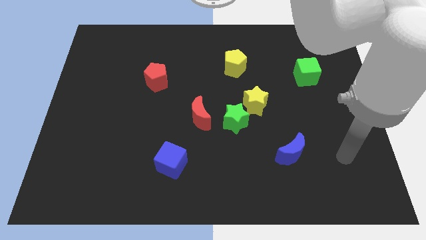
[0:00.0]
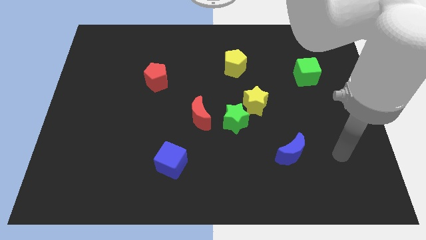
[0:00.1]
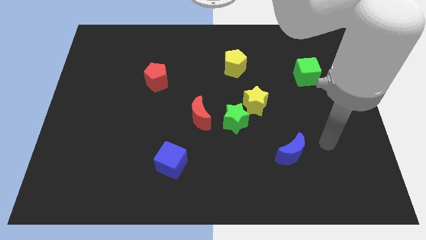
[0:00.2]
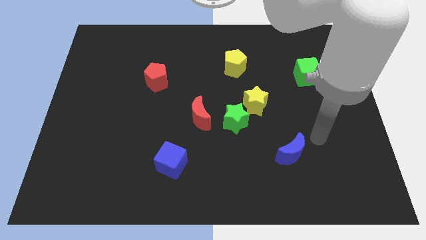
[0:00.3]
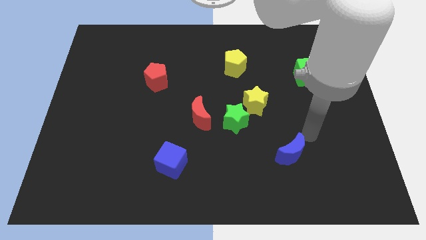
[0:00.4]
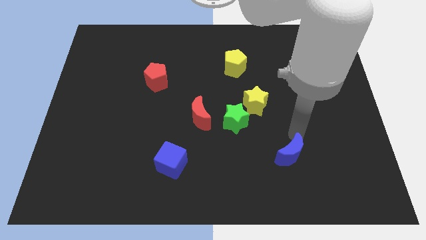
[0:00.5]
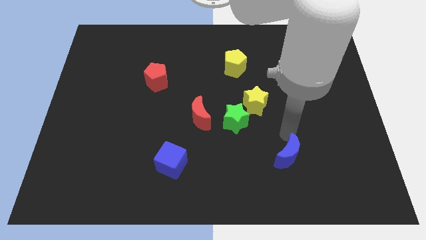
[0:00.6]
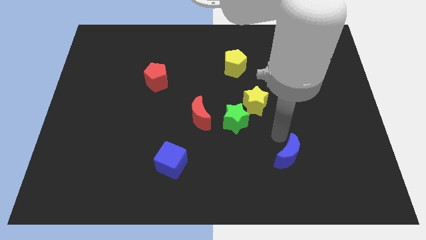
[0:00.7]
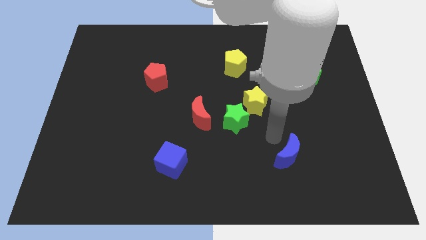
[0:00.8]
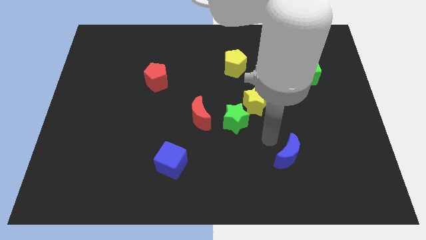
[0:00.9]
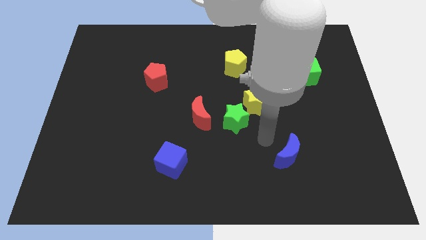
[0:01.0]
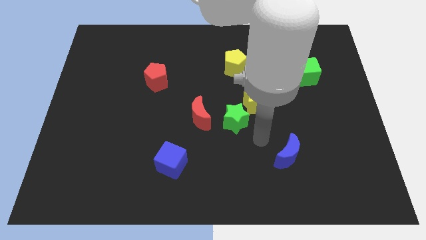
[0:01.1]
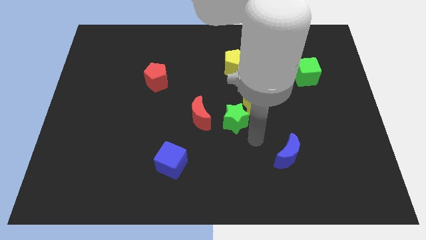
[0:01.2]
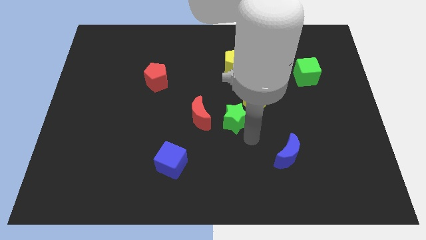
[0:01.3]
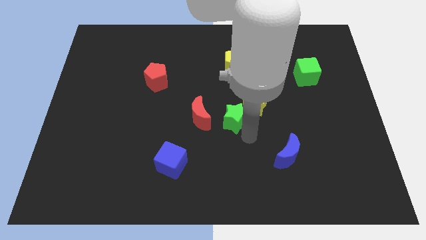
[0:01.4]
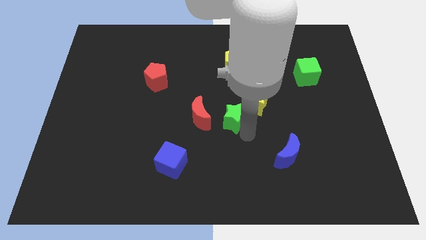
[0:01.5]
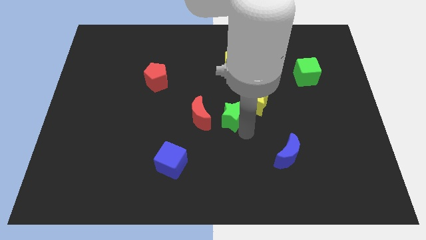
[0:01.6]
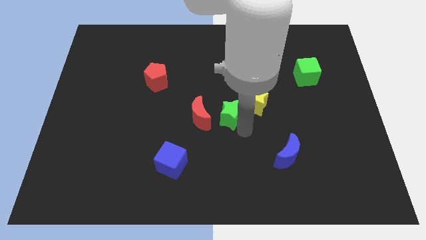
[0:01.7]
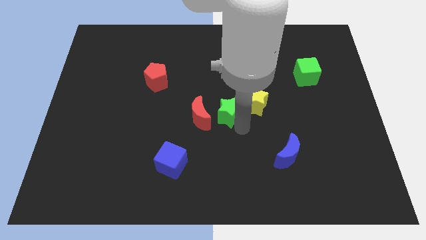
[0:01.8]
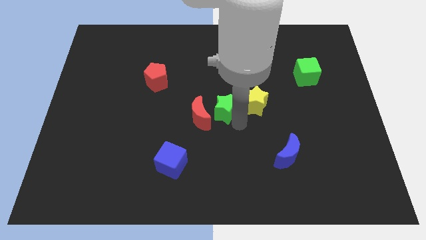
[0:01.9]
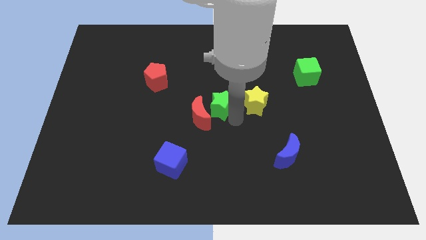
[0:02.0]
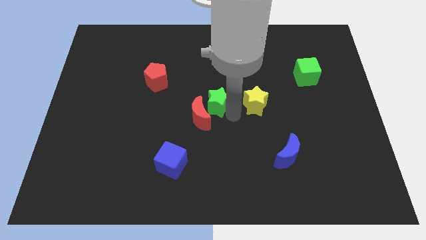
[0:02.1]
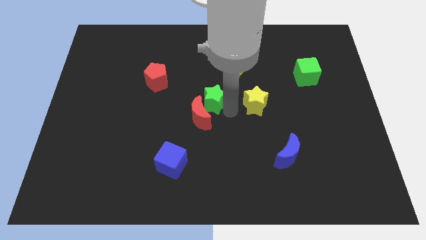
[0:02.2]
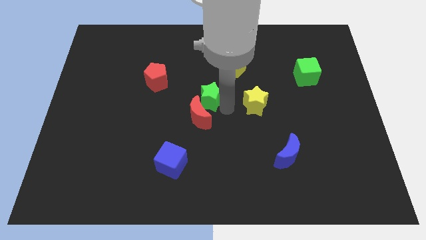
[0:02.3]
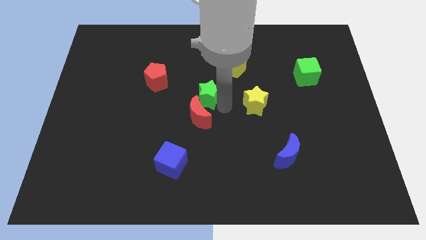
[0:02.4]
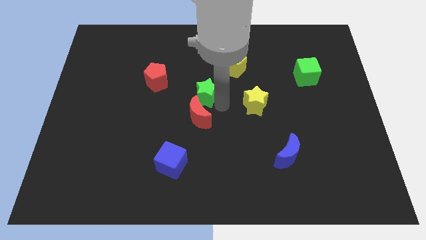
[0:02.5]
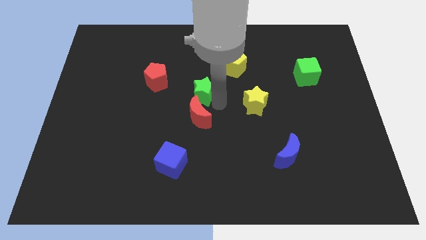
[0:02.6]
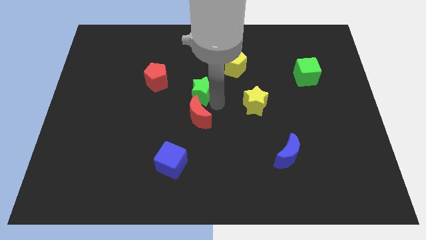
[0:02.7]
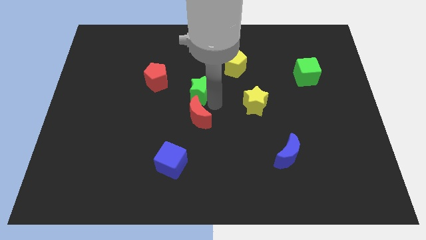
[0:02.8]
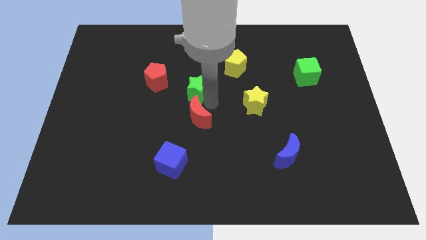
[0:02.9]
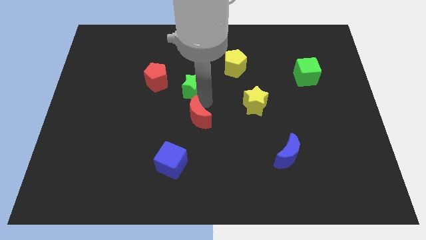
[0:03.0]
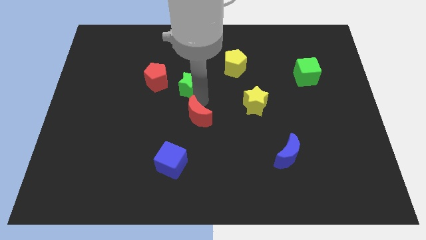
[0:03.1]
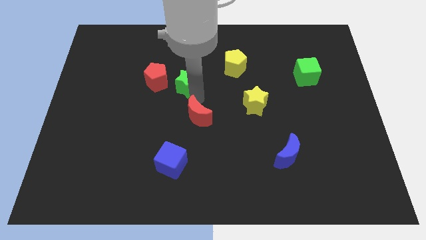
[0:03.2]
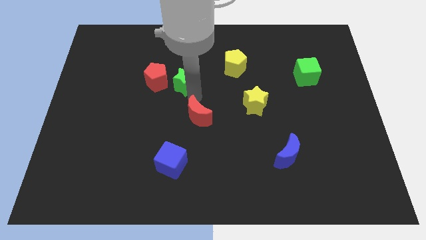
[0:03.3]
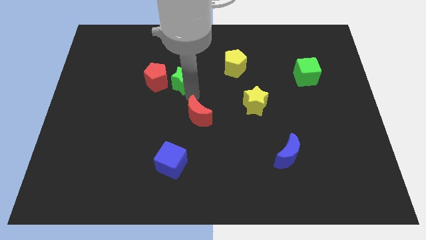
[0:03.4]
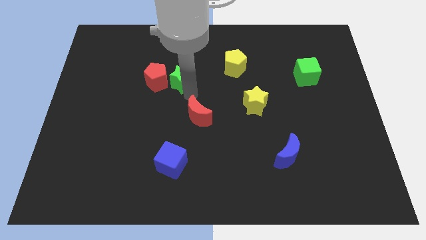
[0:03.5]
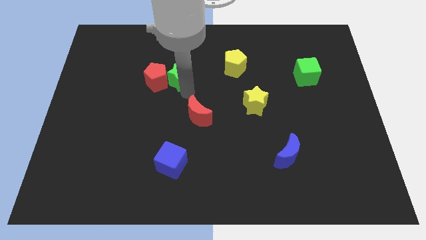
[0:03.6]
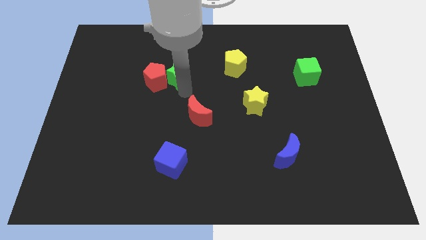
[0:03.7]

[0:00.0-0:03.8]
push the green star towards the red pentagon

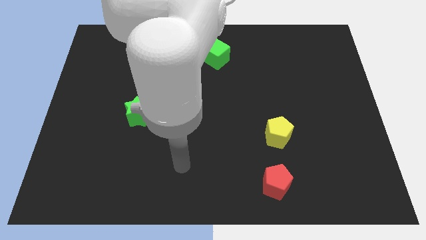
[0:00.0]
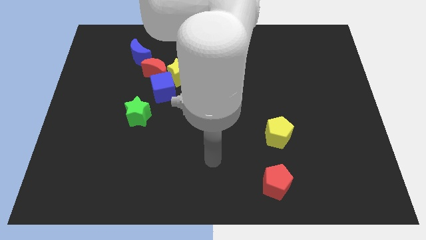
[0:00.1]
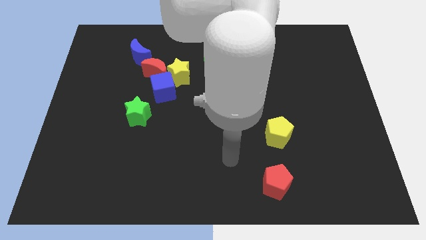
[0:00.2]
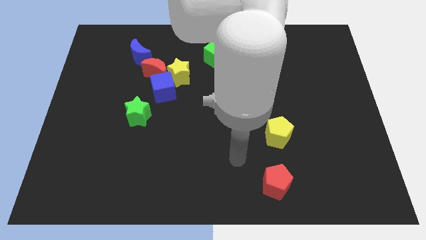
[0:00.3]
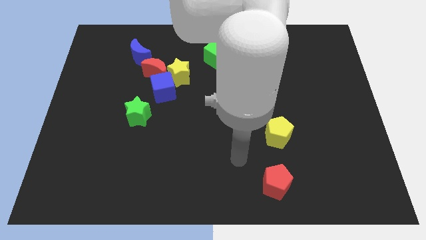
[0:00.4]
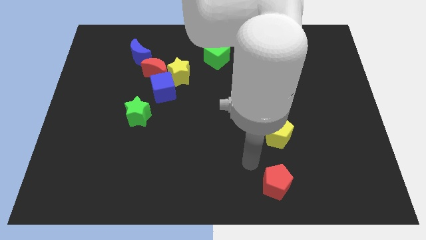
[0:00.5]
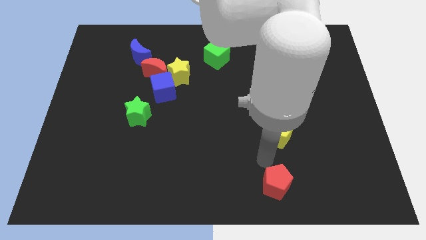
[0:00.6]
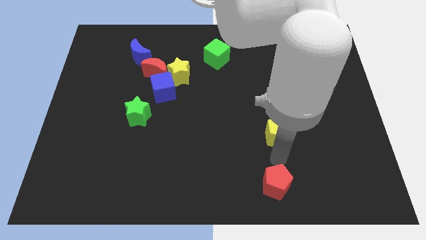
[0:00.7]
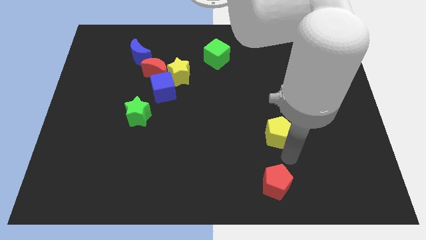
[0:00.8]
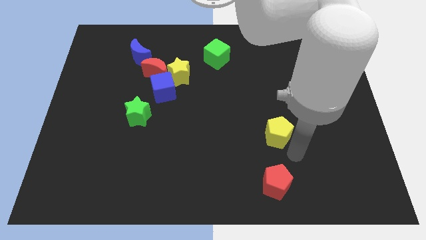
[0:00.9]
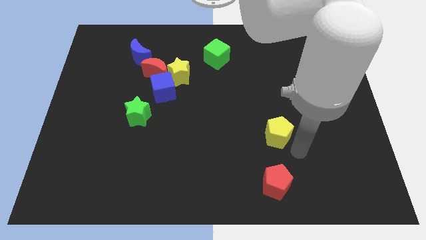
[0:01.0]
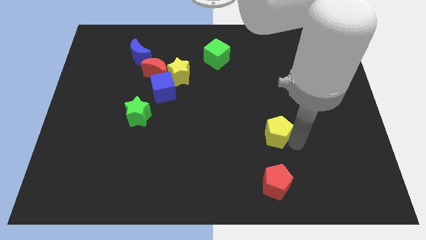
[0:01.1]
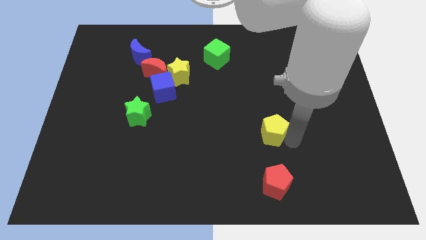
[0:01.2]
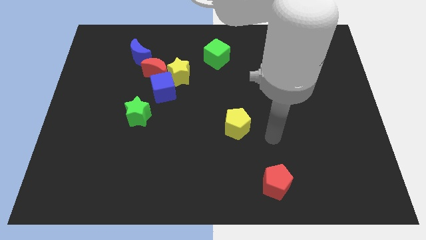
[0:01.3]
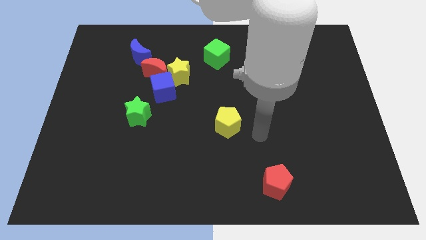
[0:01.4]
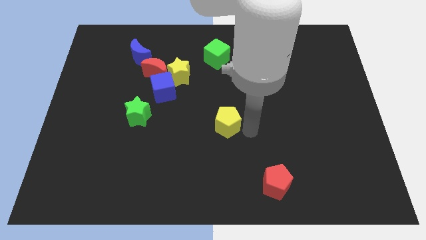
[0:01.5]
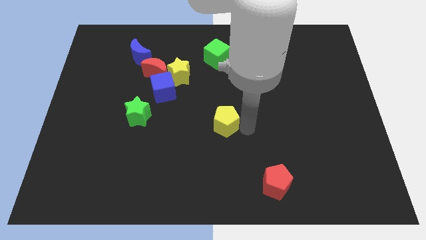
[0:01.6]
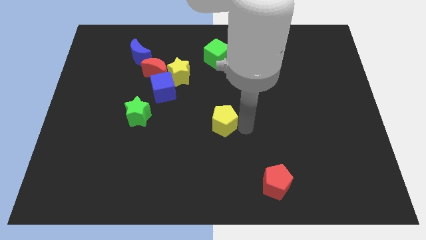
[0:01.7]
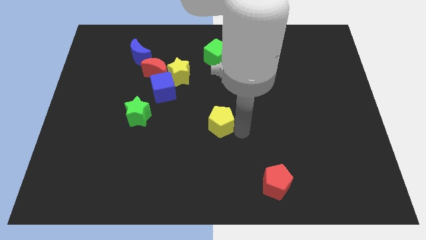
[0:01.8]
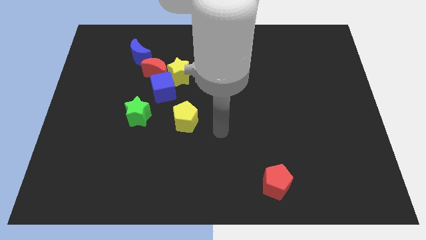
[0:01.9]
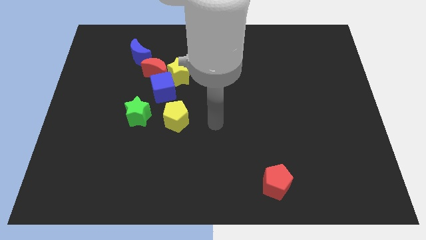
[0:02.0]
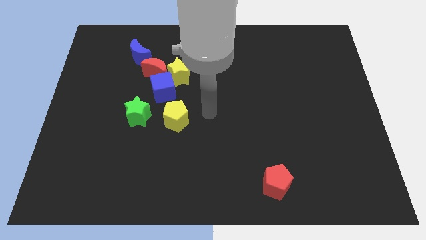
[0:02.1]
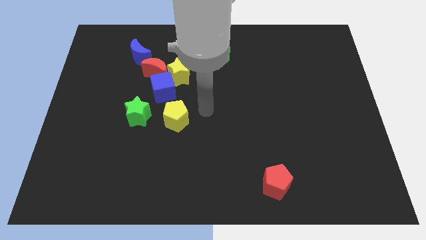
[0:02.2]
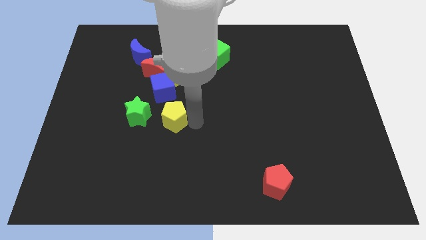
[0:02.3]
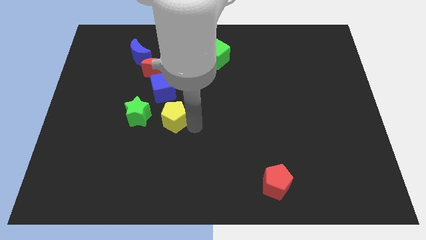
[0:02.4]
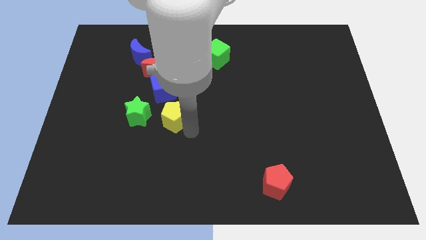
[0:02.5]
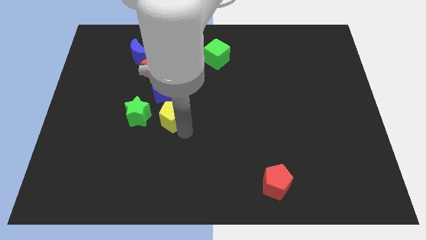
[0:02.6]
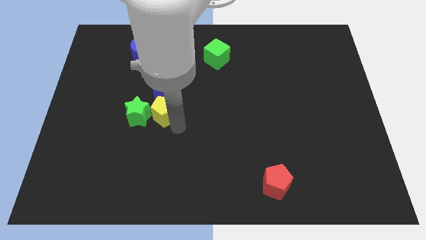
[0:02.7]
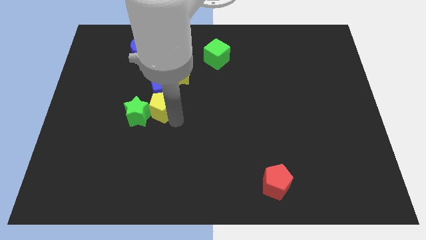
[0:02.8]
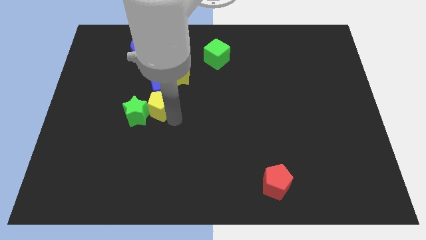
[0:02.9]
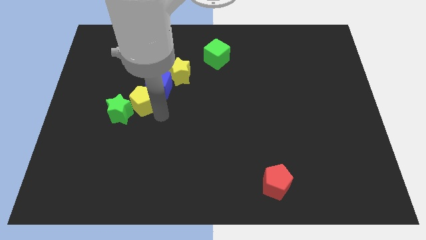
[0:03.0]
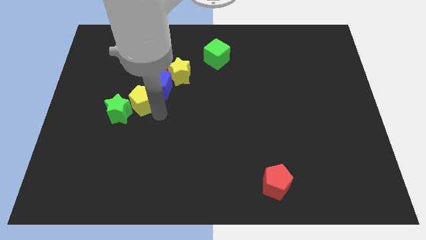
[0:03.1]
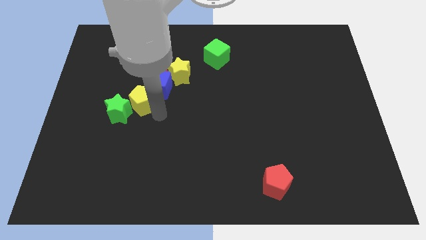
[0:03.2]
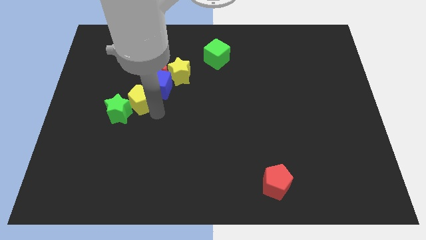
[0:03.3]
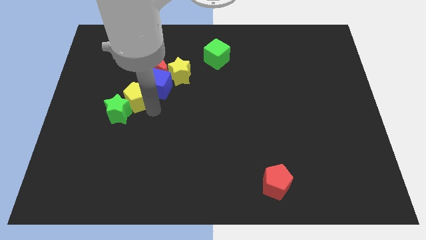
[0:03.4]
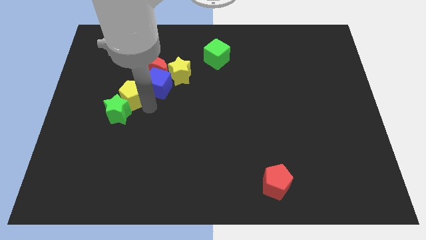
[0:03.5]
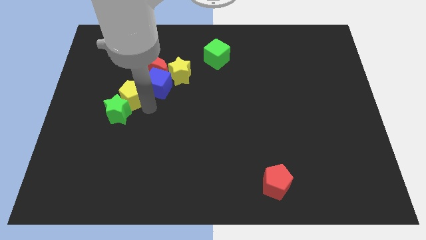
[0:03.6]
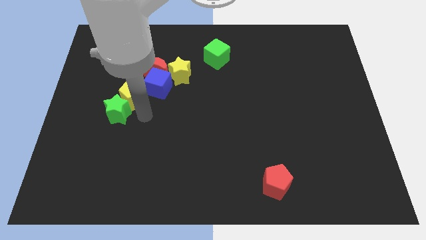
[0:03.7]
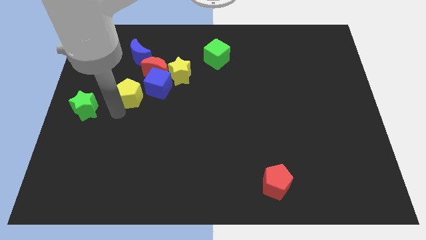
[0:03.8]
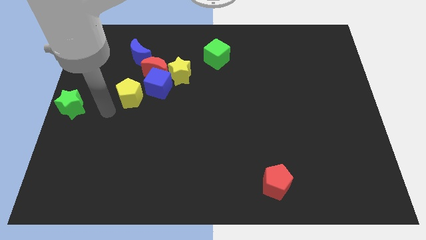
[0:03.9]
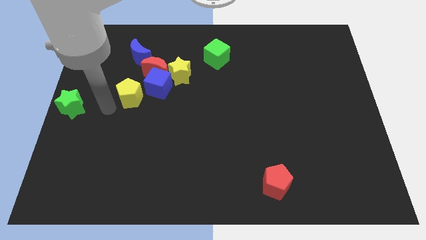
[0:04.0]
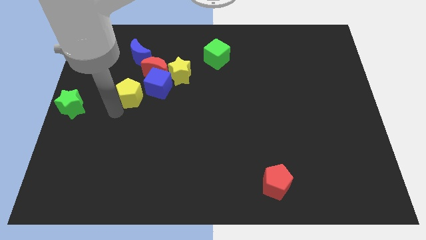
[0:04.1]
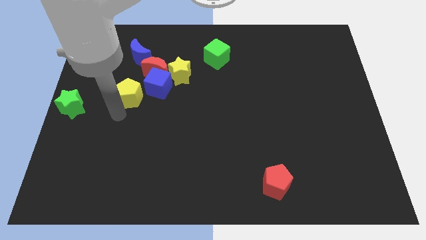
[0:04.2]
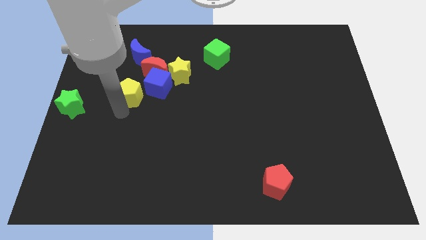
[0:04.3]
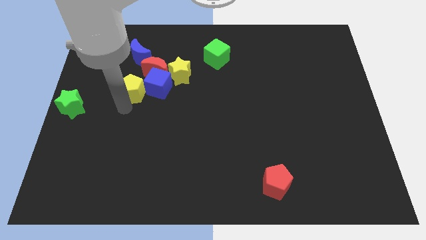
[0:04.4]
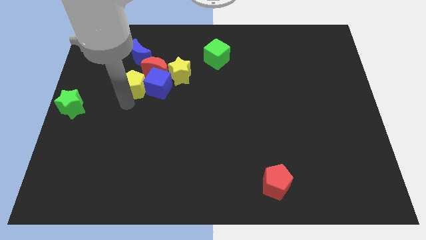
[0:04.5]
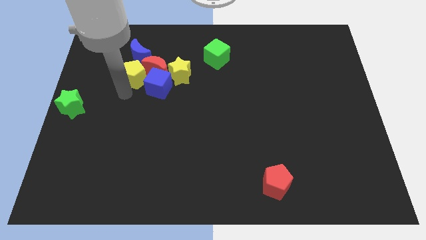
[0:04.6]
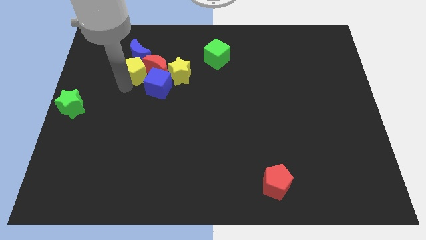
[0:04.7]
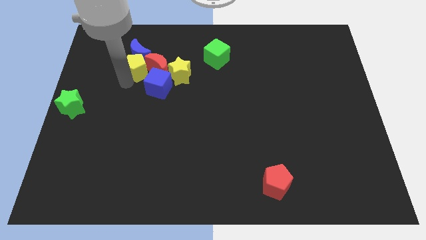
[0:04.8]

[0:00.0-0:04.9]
slide the yellow pentagon towards the red moon
